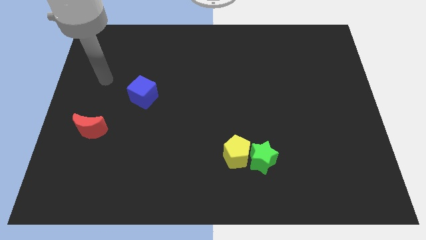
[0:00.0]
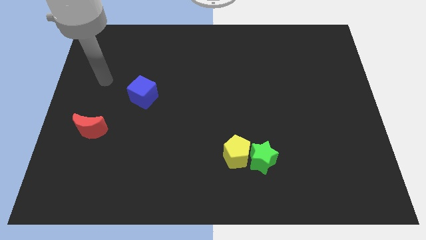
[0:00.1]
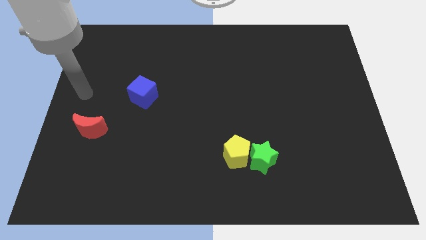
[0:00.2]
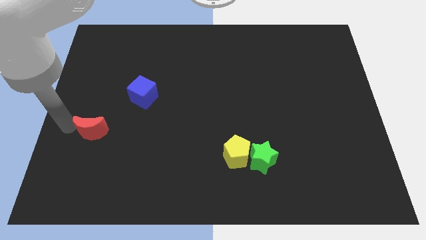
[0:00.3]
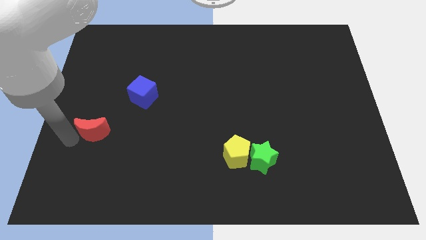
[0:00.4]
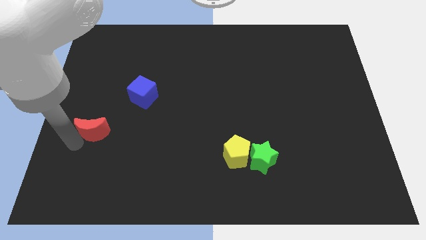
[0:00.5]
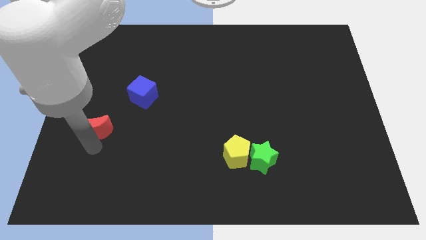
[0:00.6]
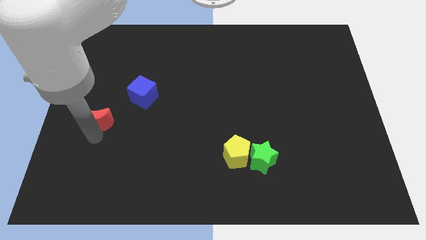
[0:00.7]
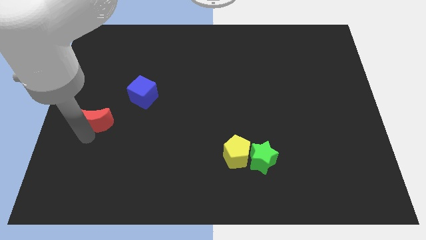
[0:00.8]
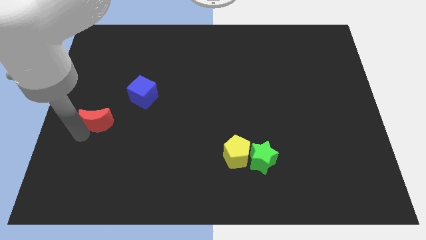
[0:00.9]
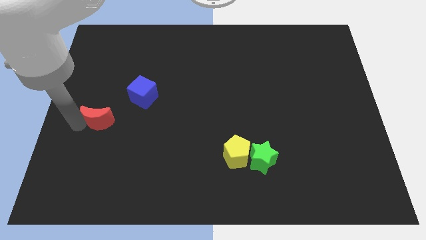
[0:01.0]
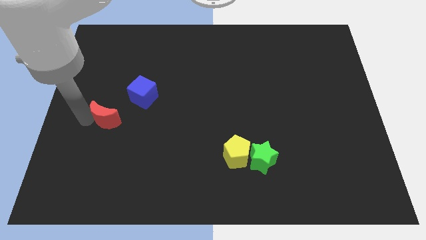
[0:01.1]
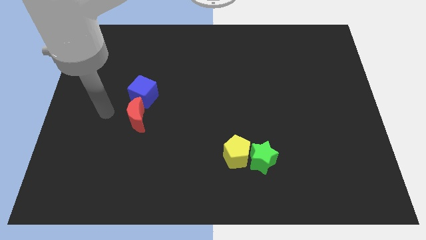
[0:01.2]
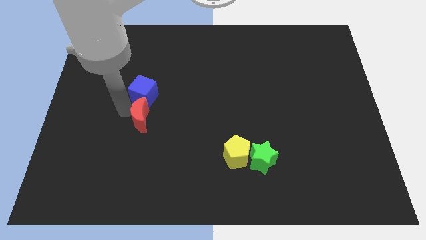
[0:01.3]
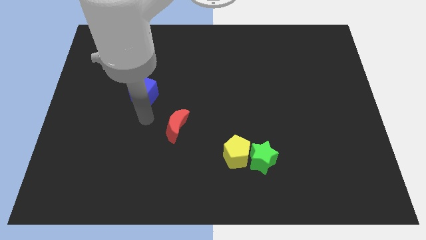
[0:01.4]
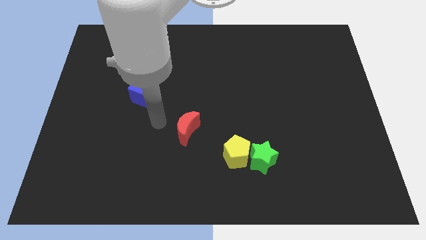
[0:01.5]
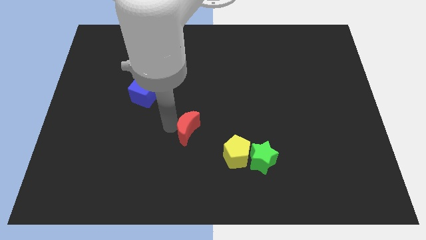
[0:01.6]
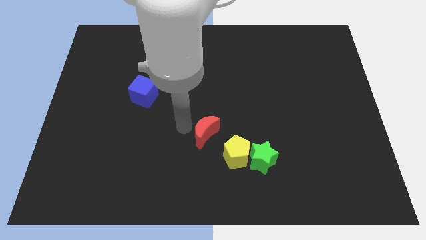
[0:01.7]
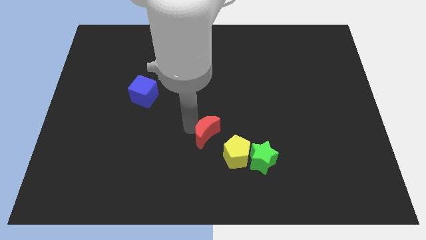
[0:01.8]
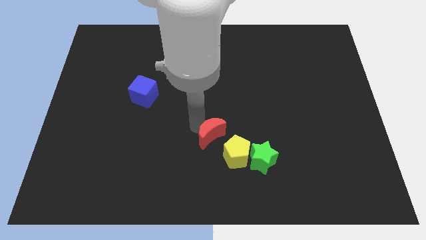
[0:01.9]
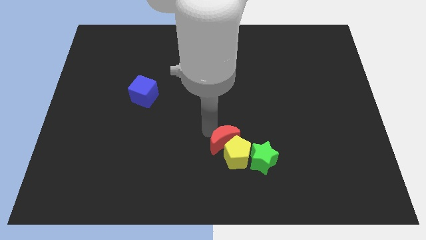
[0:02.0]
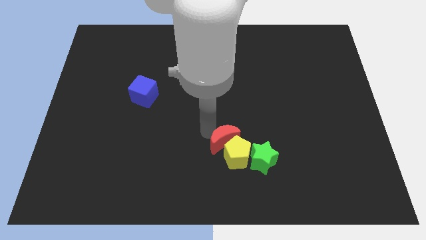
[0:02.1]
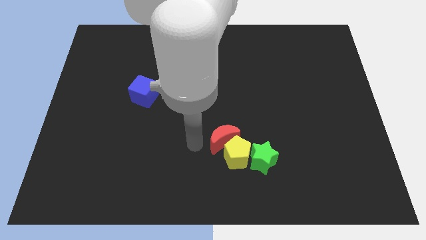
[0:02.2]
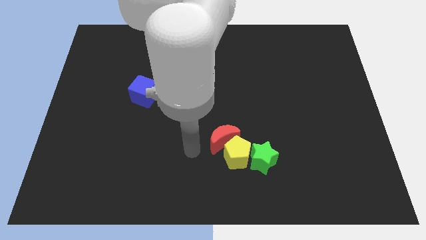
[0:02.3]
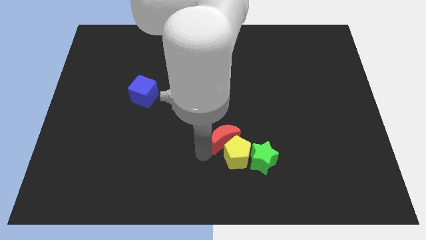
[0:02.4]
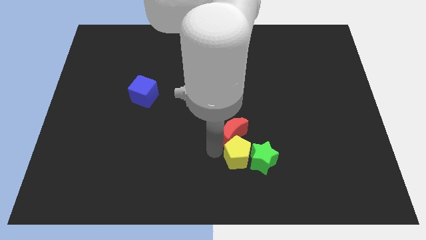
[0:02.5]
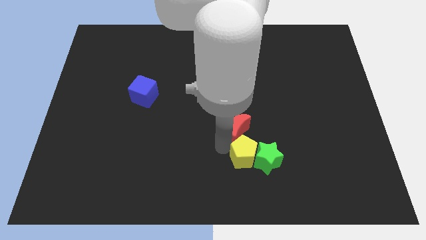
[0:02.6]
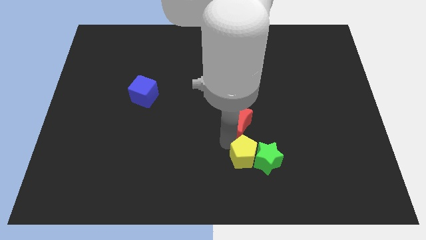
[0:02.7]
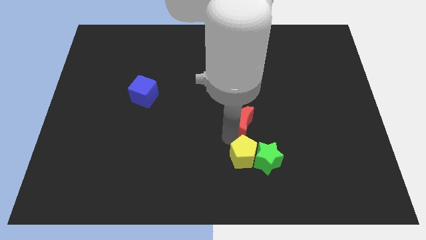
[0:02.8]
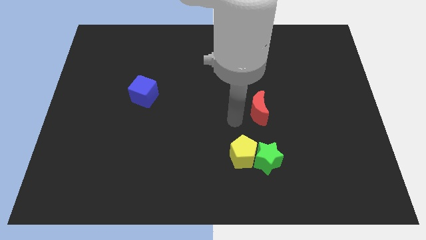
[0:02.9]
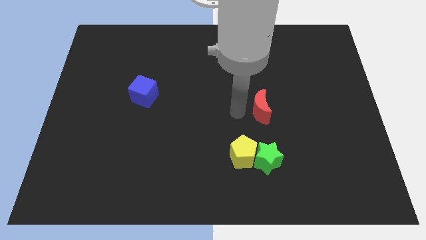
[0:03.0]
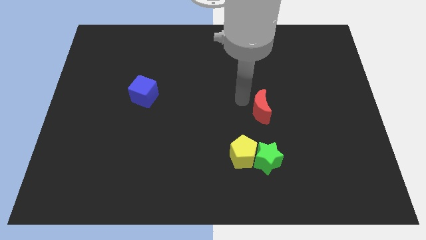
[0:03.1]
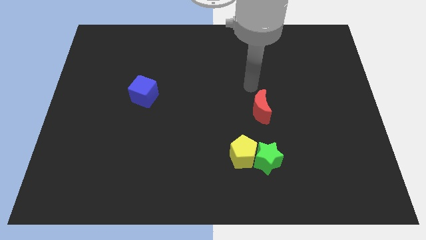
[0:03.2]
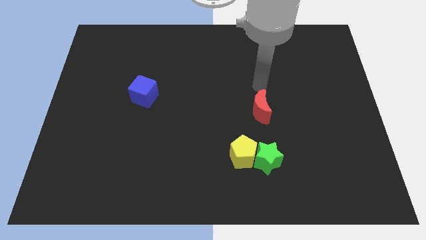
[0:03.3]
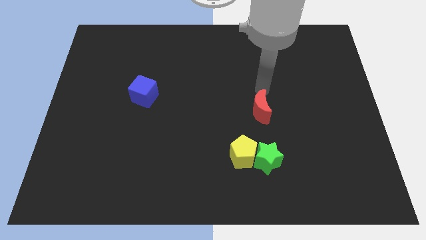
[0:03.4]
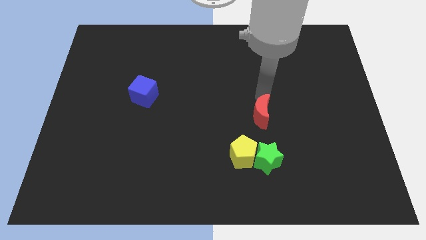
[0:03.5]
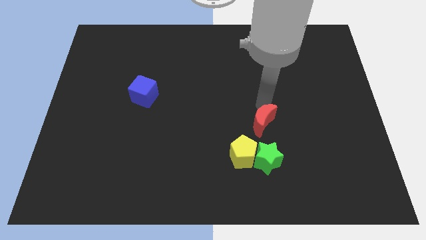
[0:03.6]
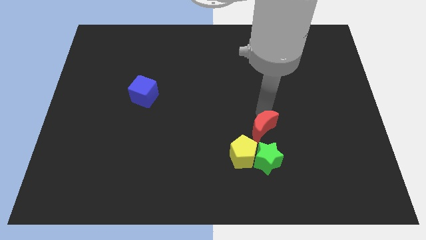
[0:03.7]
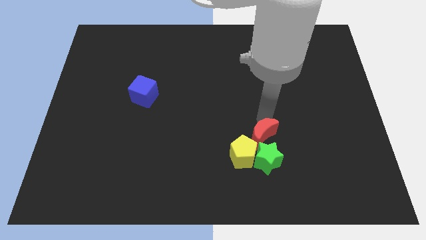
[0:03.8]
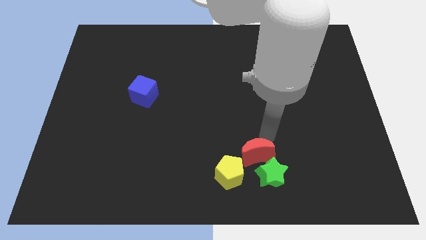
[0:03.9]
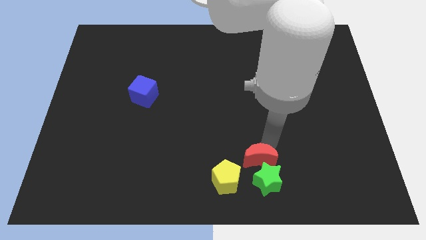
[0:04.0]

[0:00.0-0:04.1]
slide the red block towards the star

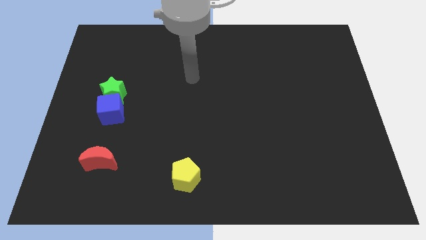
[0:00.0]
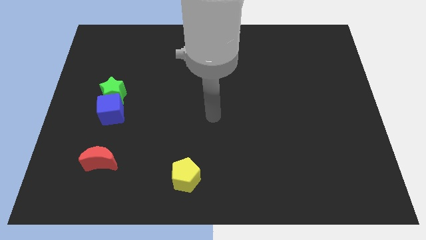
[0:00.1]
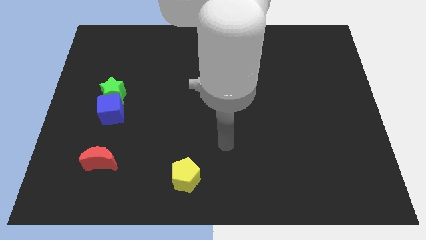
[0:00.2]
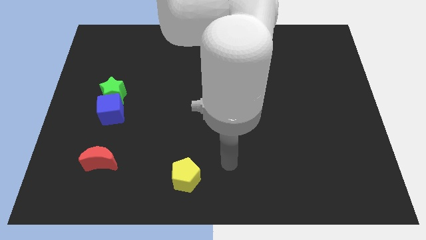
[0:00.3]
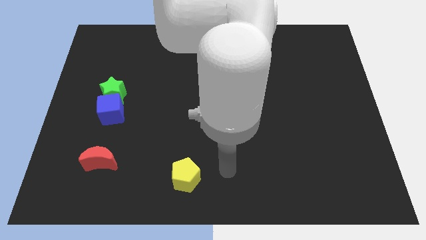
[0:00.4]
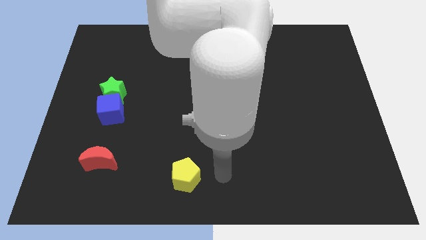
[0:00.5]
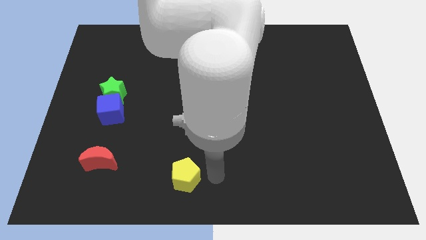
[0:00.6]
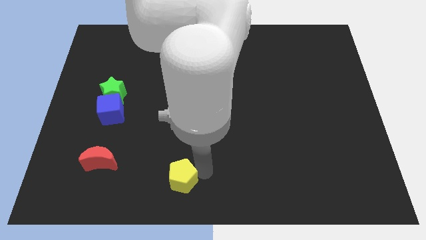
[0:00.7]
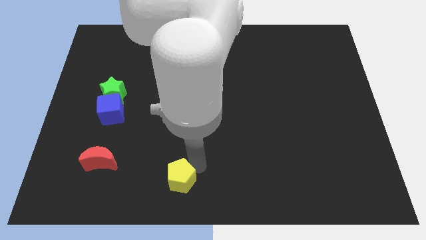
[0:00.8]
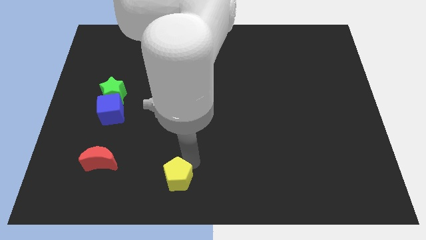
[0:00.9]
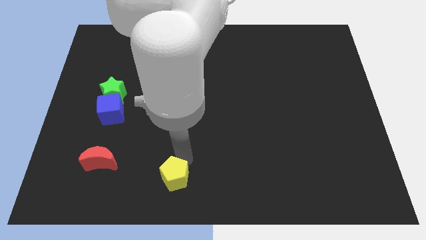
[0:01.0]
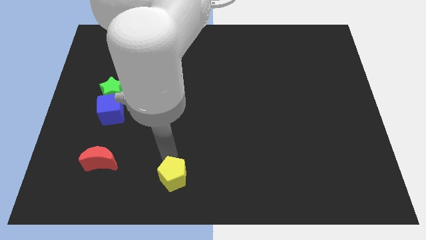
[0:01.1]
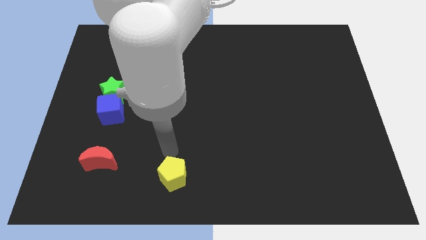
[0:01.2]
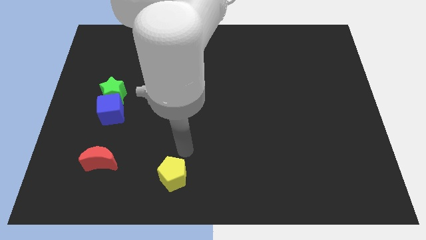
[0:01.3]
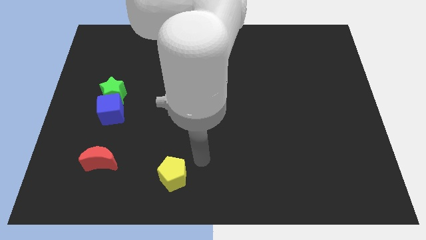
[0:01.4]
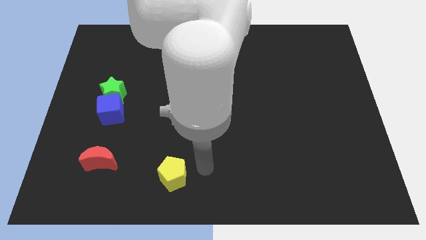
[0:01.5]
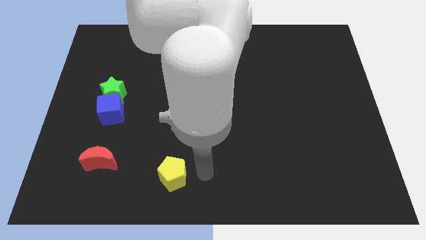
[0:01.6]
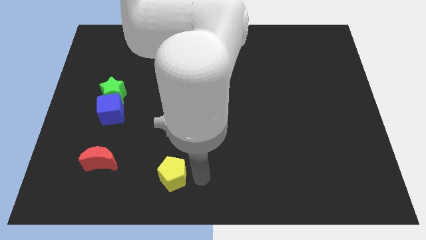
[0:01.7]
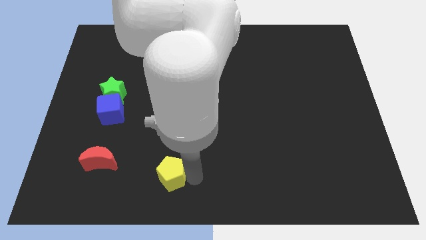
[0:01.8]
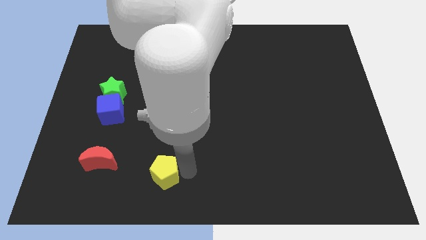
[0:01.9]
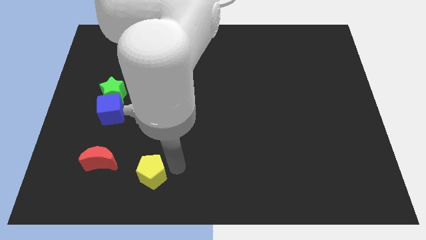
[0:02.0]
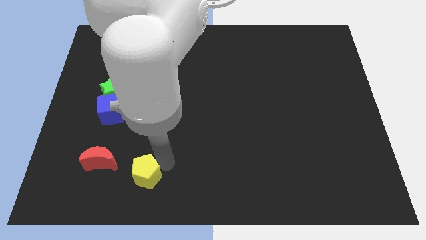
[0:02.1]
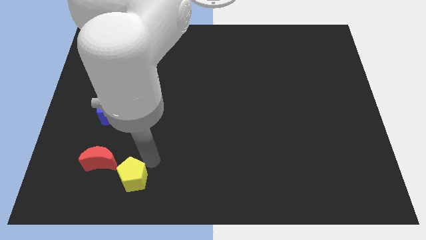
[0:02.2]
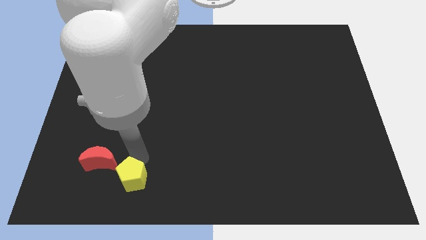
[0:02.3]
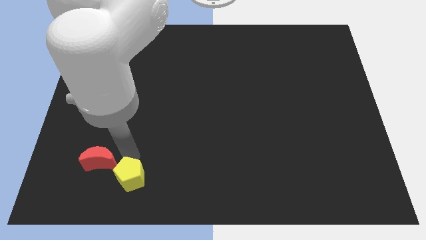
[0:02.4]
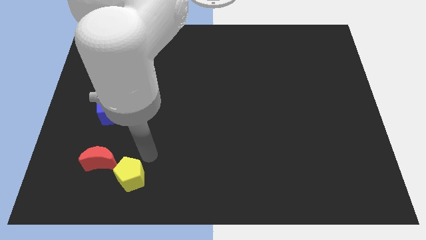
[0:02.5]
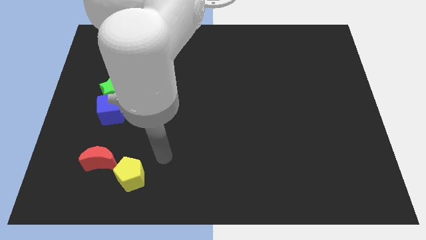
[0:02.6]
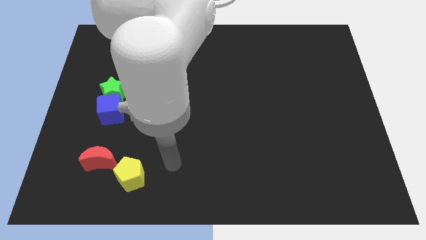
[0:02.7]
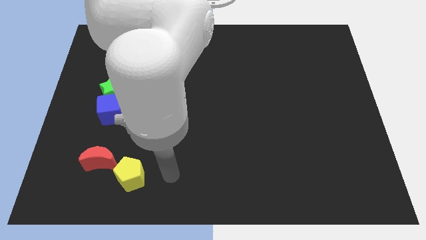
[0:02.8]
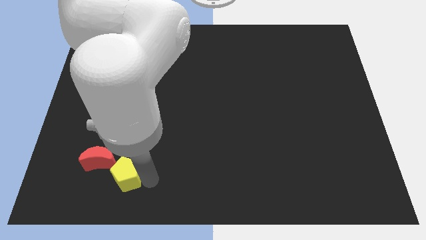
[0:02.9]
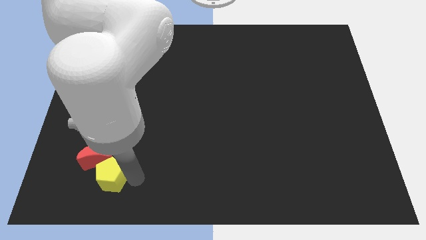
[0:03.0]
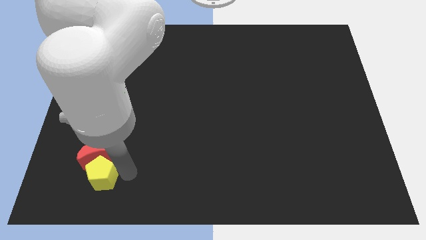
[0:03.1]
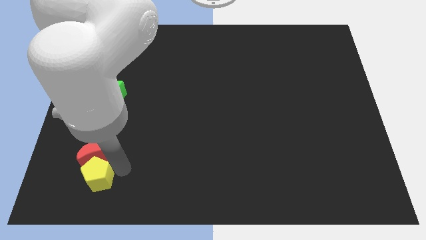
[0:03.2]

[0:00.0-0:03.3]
move the yellow pentagon to the moon

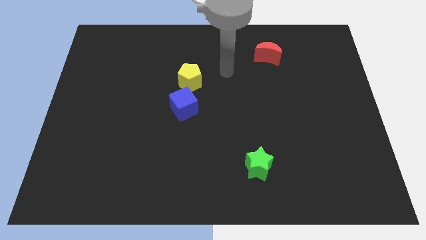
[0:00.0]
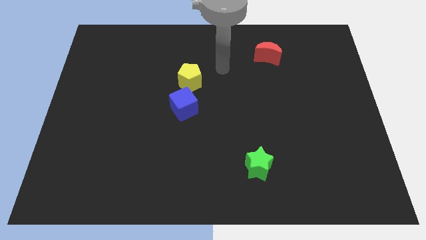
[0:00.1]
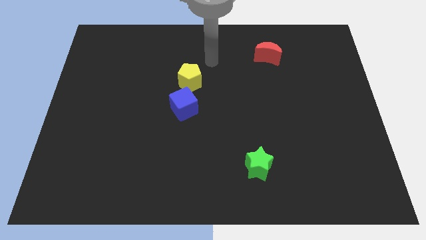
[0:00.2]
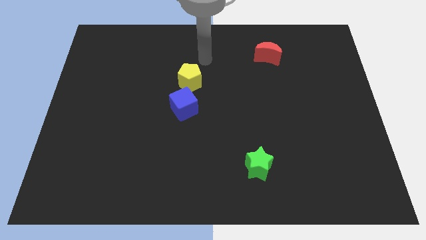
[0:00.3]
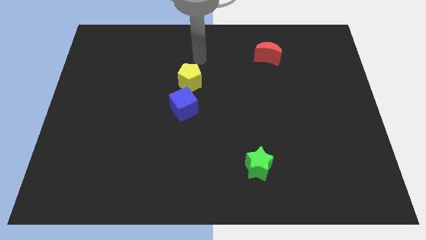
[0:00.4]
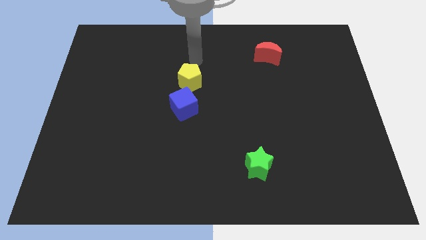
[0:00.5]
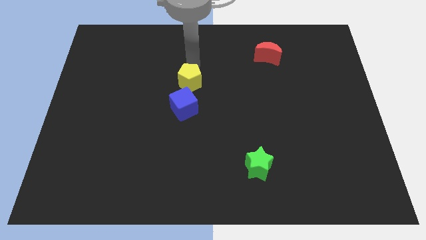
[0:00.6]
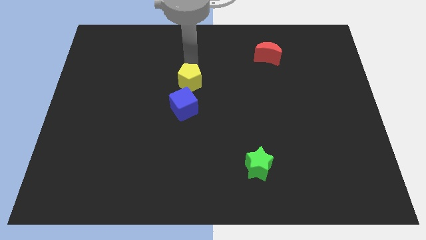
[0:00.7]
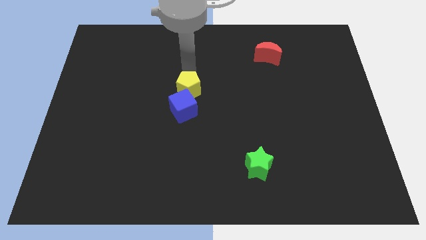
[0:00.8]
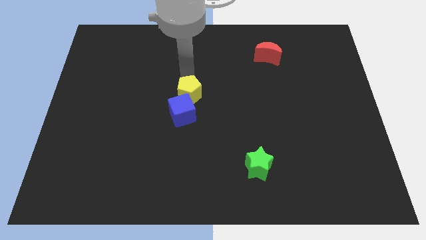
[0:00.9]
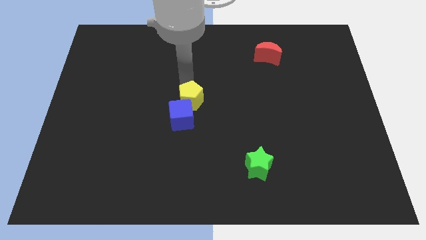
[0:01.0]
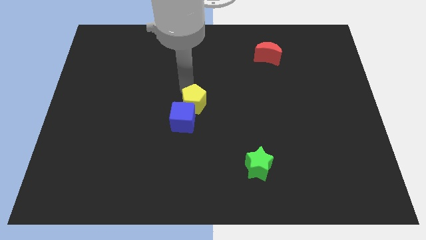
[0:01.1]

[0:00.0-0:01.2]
slide the pentagon towards the blue block
